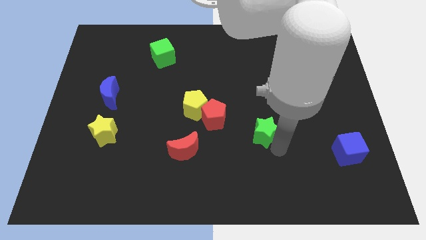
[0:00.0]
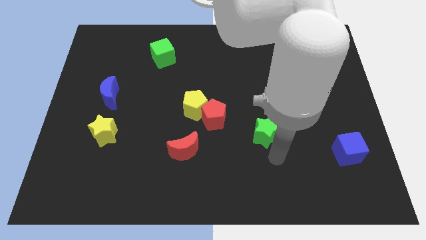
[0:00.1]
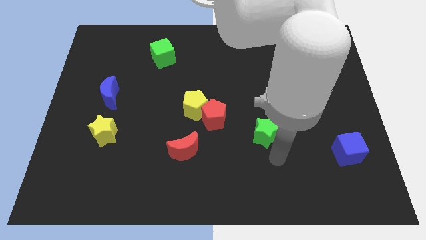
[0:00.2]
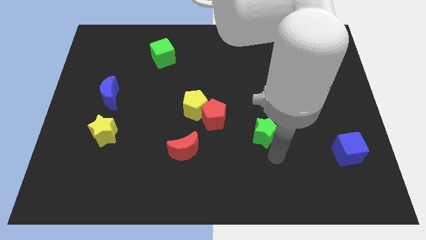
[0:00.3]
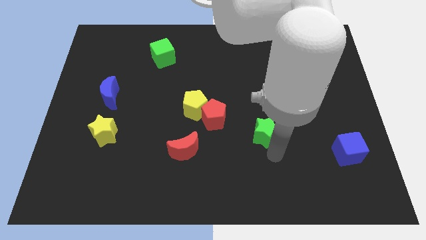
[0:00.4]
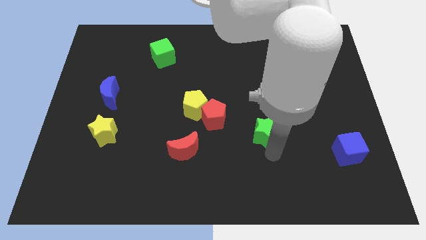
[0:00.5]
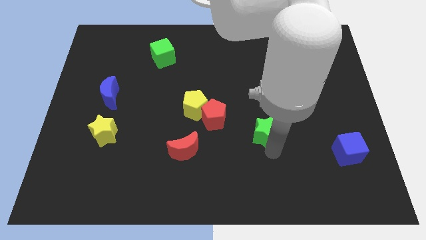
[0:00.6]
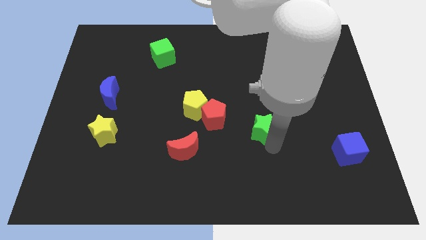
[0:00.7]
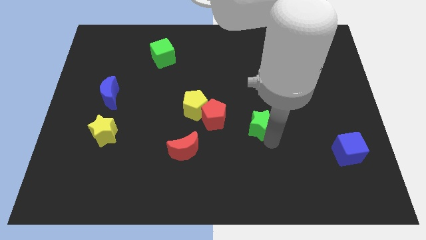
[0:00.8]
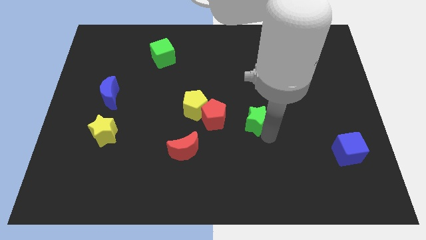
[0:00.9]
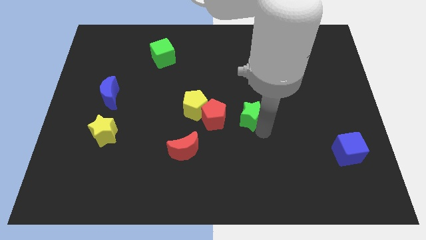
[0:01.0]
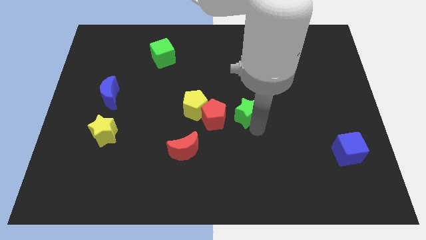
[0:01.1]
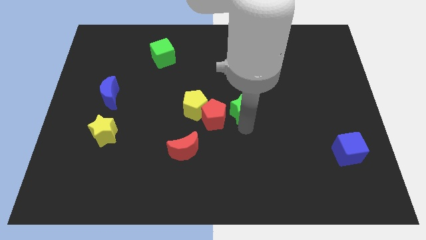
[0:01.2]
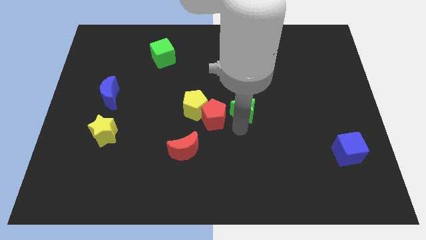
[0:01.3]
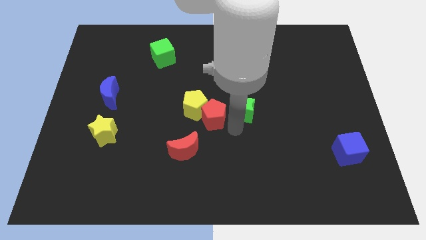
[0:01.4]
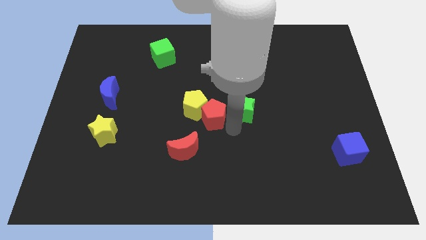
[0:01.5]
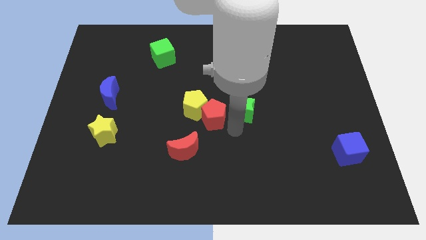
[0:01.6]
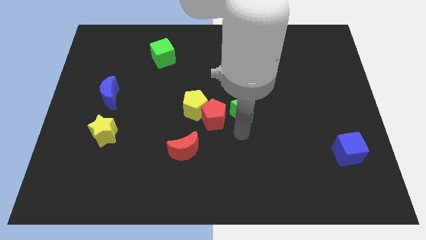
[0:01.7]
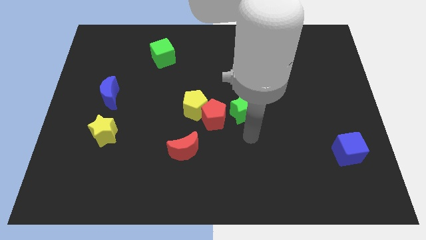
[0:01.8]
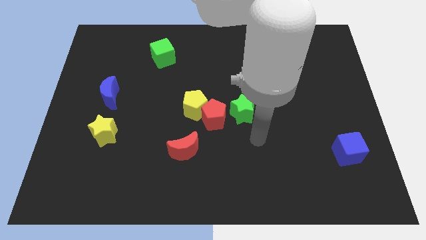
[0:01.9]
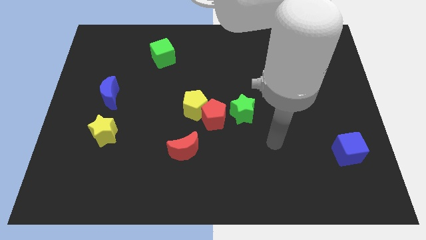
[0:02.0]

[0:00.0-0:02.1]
place the green star to the right of red pentagon

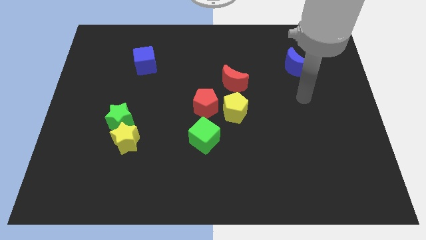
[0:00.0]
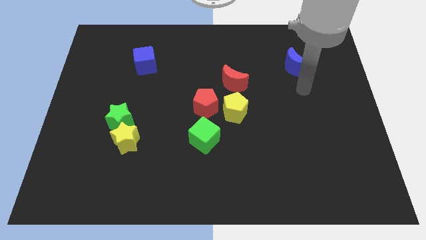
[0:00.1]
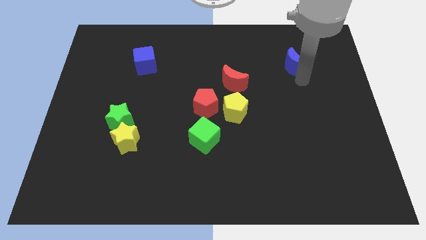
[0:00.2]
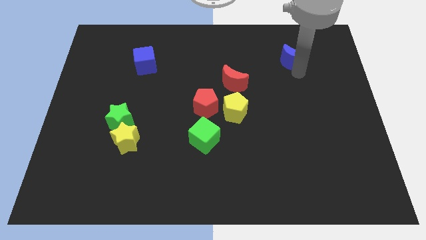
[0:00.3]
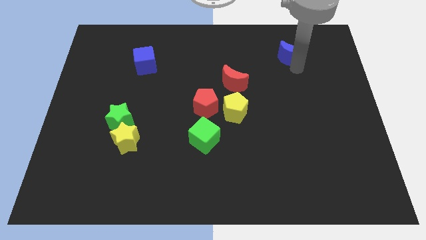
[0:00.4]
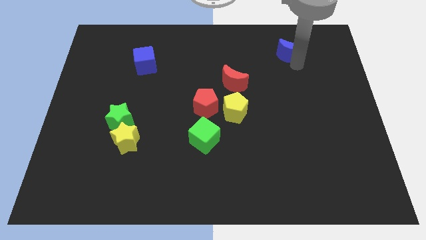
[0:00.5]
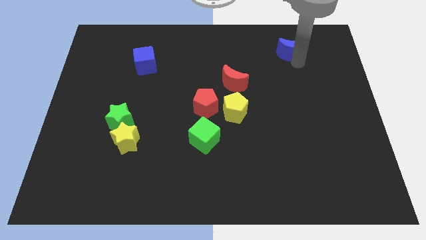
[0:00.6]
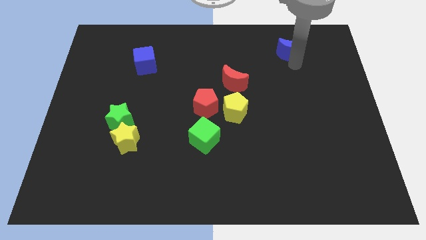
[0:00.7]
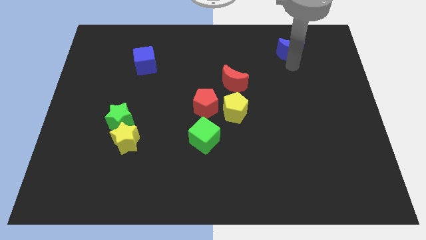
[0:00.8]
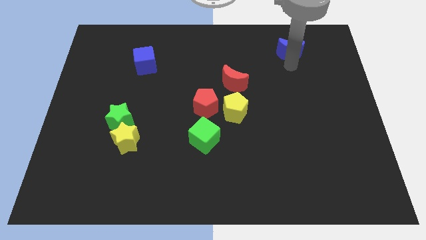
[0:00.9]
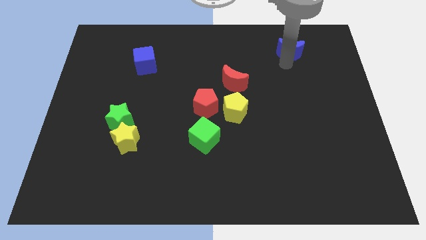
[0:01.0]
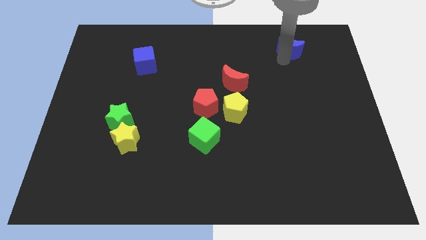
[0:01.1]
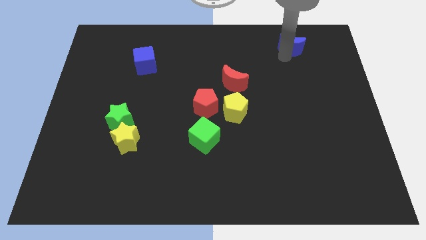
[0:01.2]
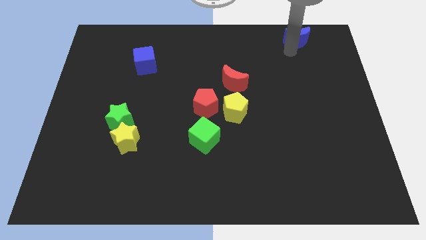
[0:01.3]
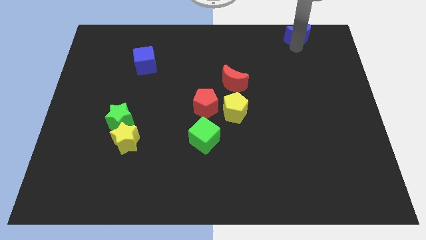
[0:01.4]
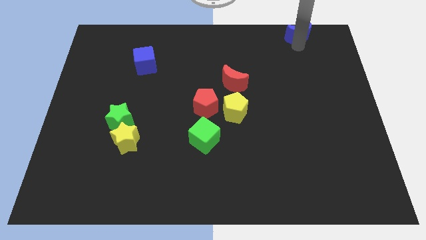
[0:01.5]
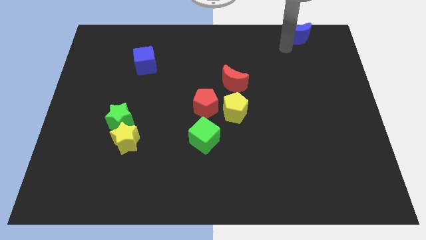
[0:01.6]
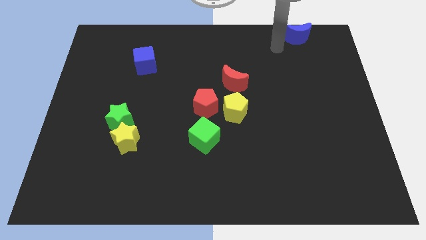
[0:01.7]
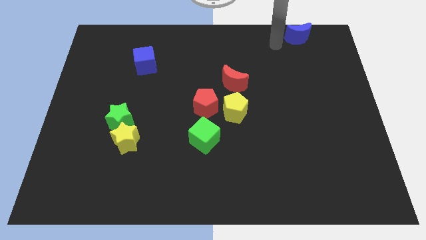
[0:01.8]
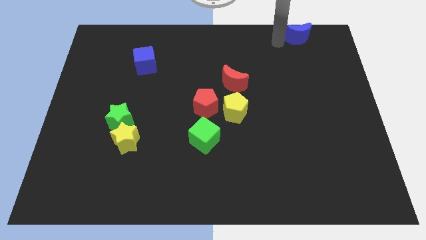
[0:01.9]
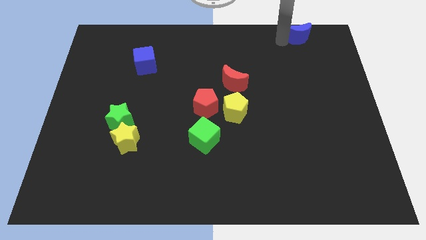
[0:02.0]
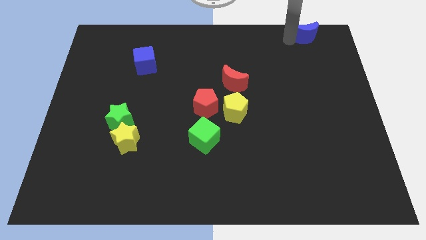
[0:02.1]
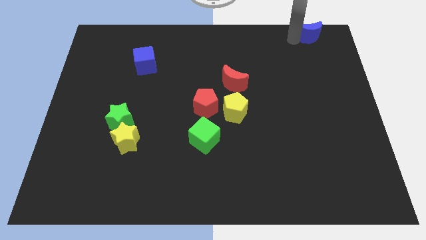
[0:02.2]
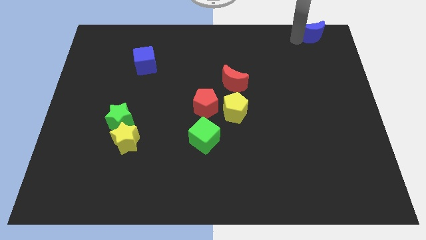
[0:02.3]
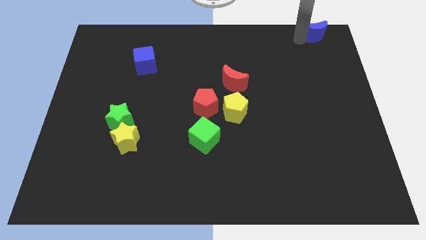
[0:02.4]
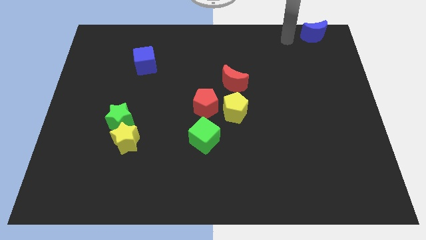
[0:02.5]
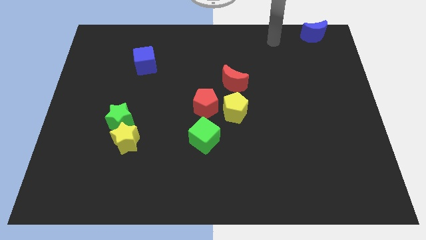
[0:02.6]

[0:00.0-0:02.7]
move the blue moon towards the top right corner of the board

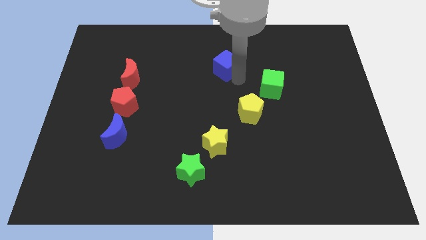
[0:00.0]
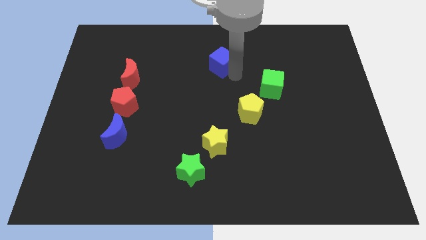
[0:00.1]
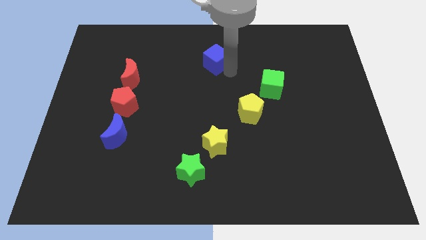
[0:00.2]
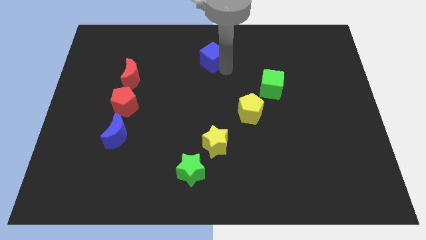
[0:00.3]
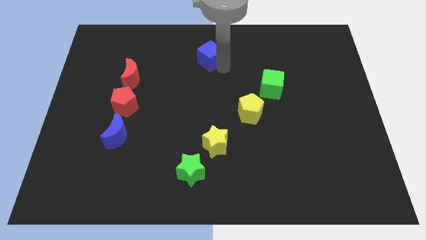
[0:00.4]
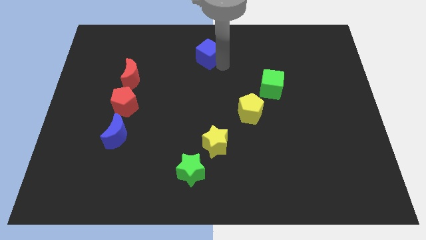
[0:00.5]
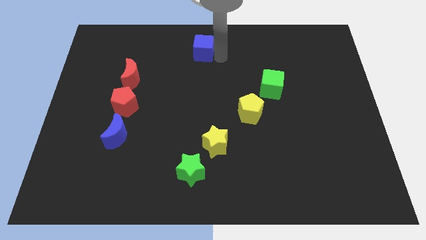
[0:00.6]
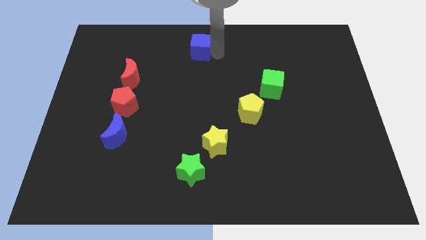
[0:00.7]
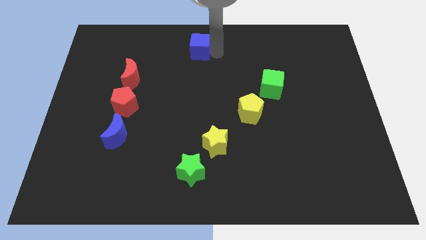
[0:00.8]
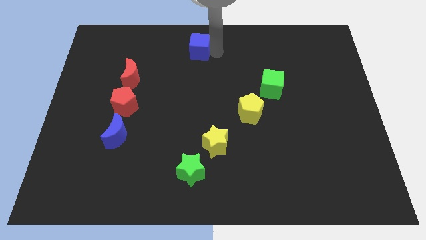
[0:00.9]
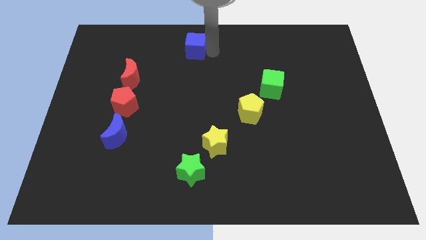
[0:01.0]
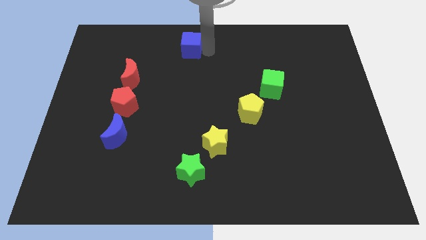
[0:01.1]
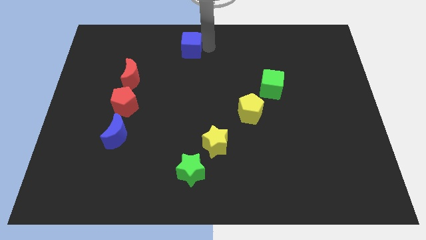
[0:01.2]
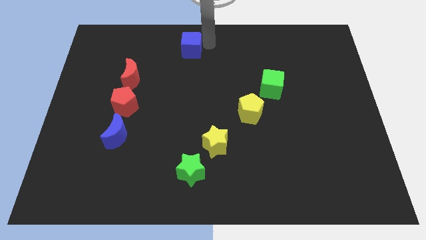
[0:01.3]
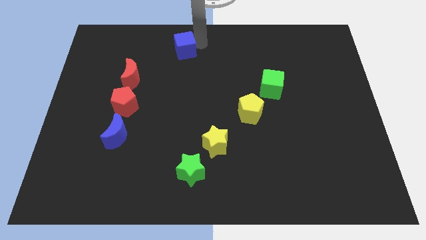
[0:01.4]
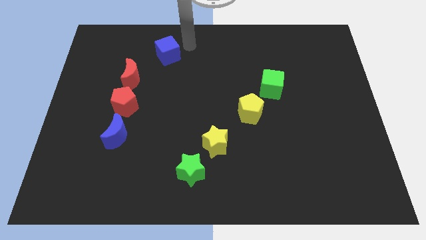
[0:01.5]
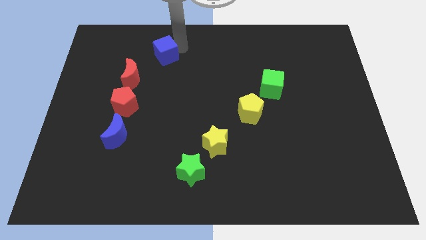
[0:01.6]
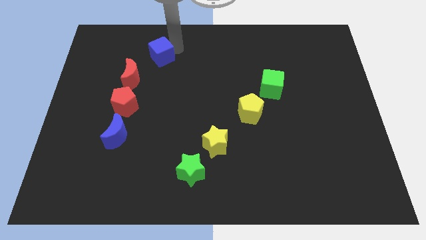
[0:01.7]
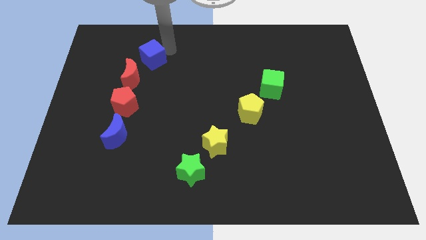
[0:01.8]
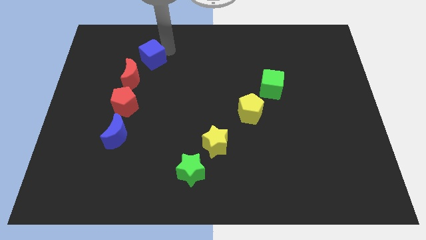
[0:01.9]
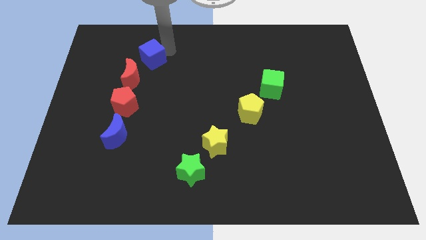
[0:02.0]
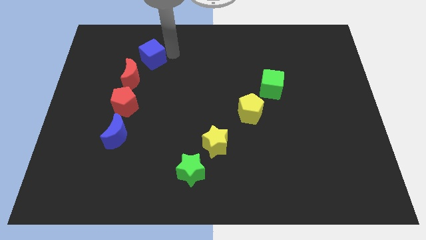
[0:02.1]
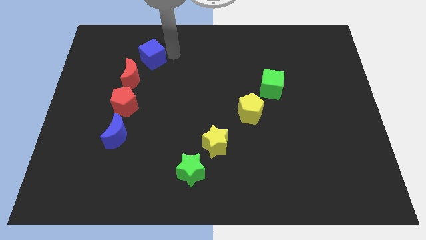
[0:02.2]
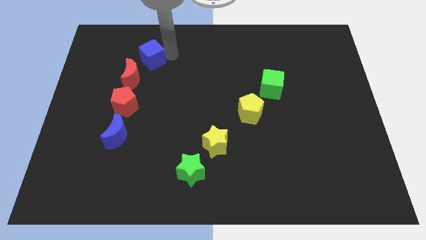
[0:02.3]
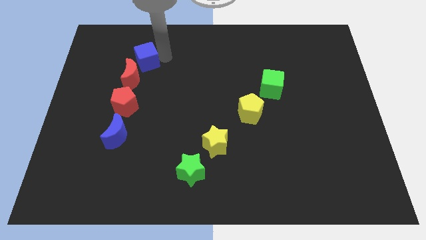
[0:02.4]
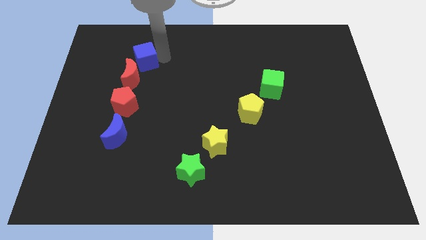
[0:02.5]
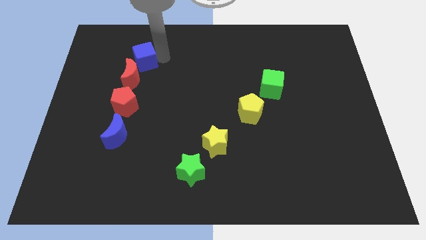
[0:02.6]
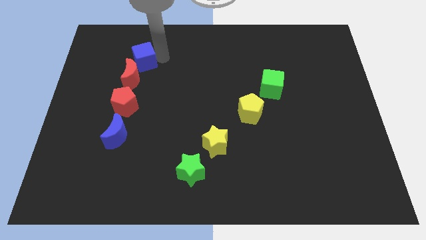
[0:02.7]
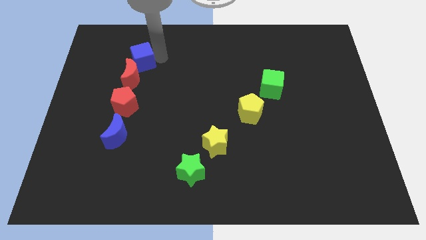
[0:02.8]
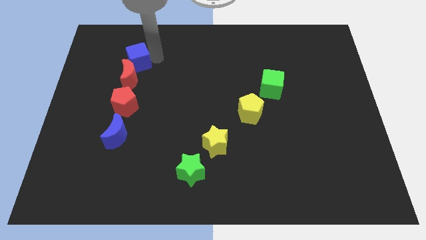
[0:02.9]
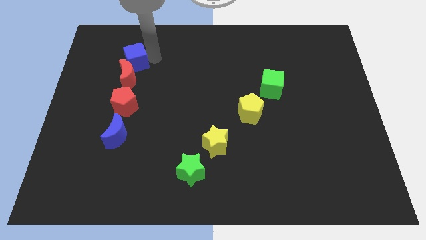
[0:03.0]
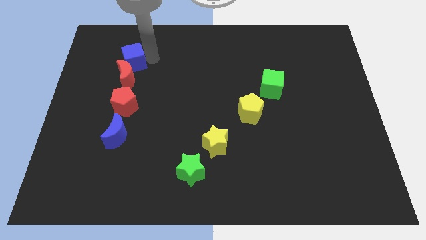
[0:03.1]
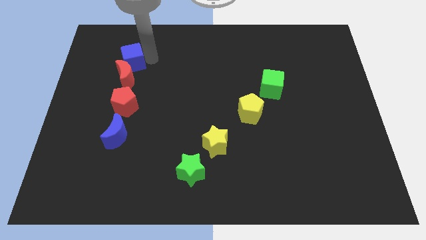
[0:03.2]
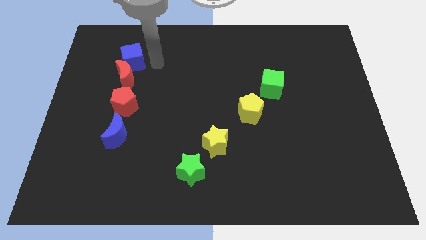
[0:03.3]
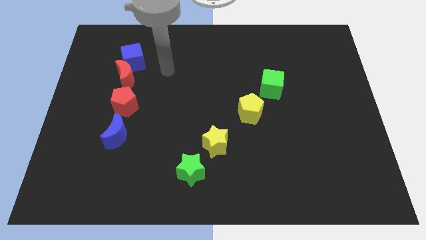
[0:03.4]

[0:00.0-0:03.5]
push the blue cube to the top side of the red moon

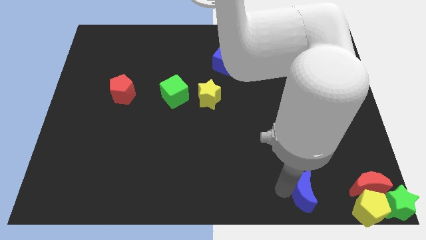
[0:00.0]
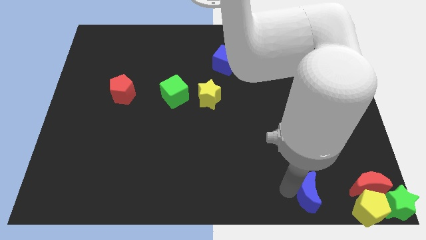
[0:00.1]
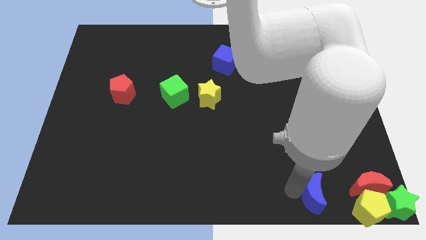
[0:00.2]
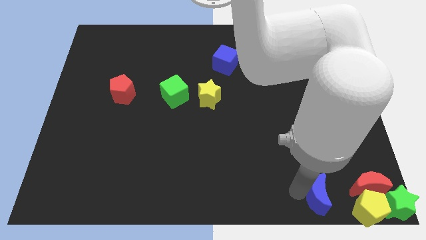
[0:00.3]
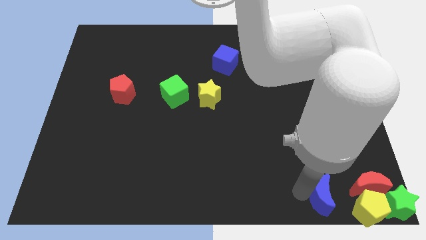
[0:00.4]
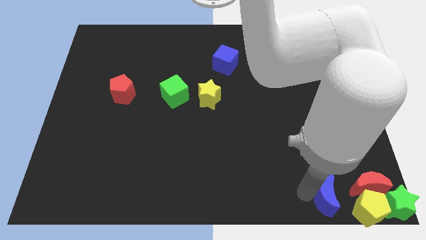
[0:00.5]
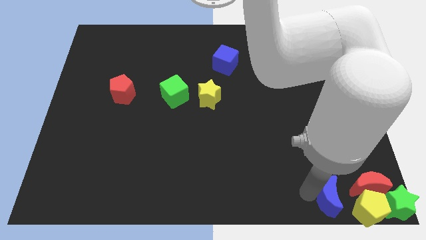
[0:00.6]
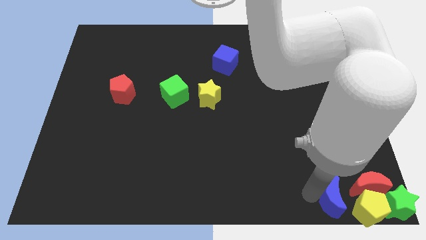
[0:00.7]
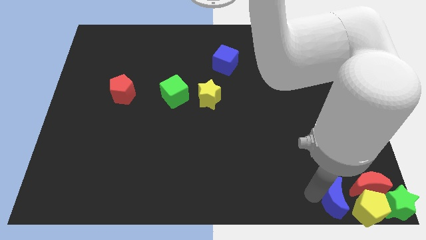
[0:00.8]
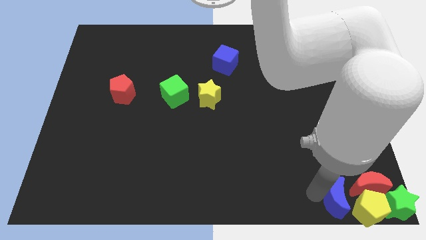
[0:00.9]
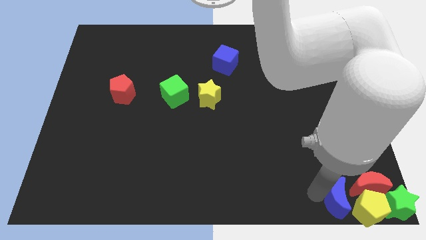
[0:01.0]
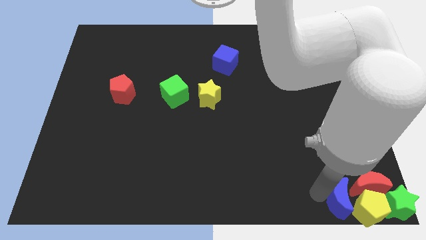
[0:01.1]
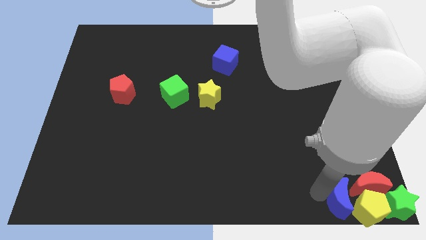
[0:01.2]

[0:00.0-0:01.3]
place the blue moon into the group of blocks
